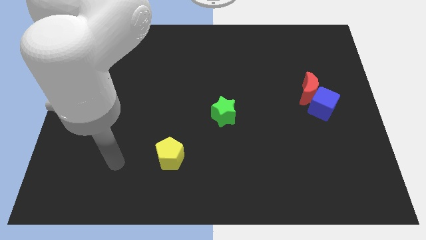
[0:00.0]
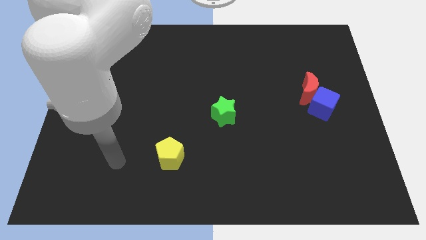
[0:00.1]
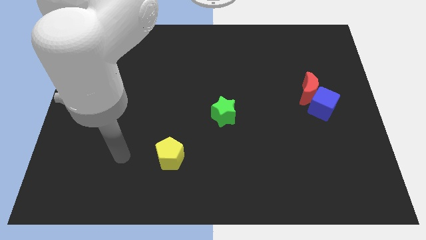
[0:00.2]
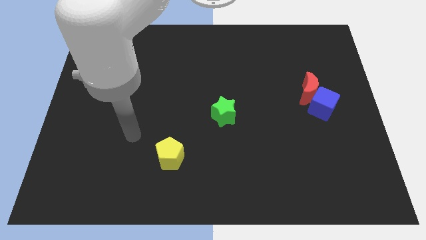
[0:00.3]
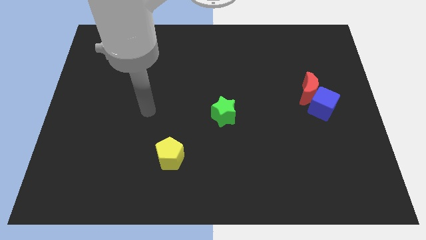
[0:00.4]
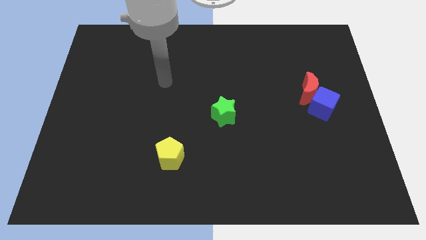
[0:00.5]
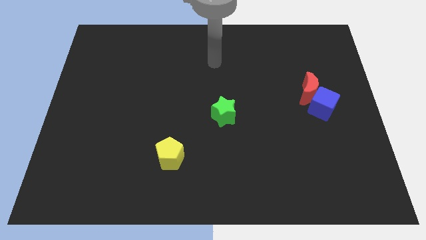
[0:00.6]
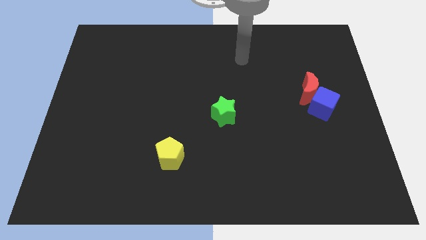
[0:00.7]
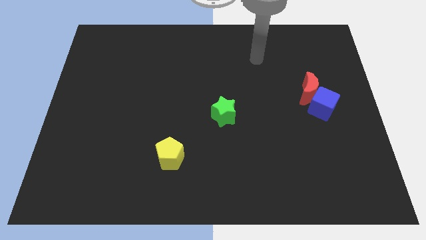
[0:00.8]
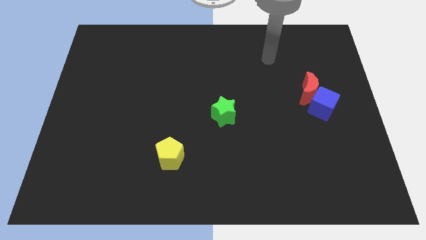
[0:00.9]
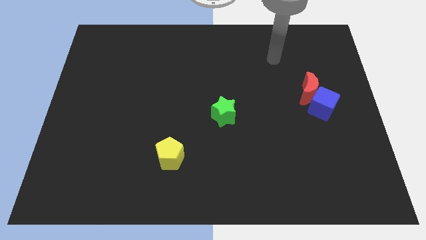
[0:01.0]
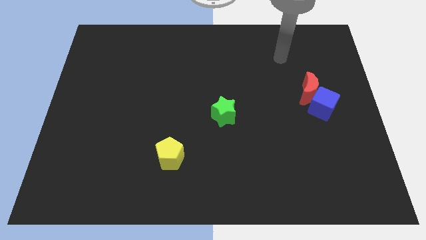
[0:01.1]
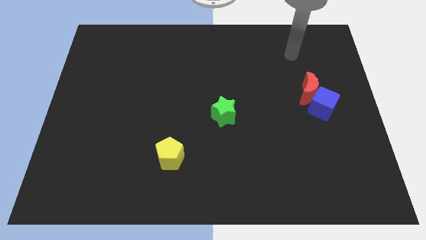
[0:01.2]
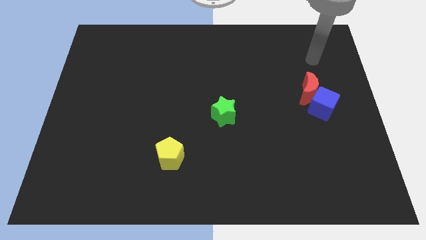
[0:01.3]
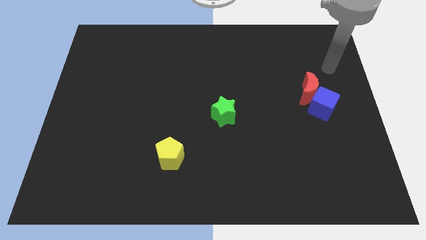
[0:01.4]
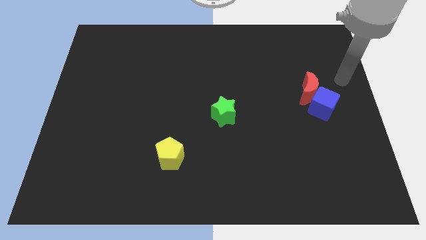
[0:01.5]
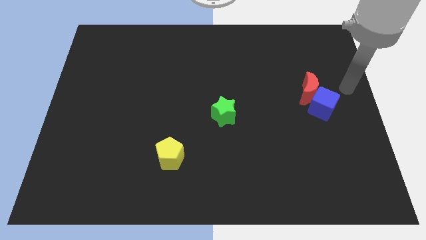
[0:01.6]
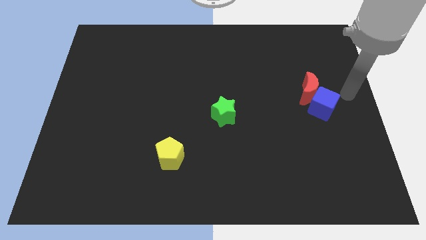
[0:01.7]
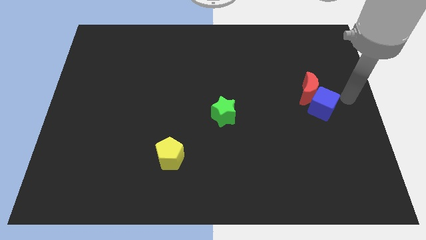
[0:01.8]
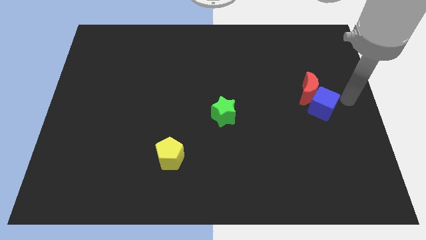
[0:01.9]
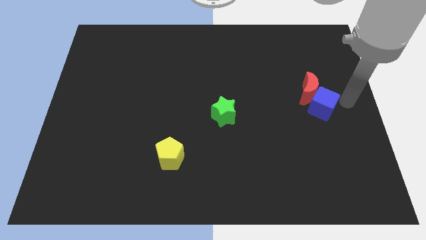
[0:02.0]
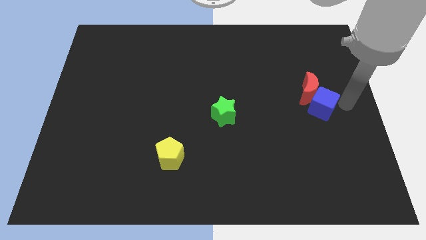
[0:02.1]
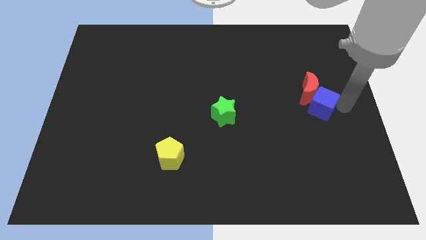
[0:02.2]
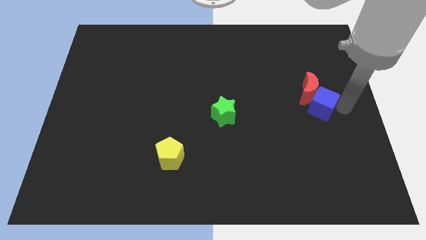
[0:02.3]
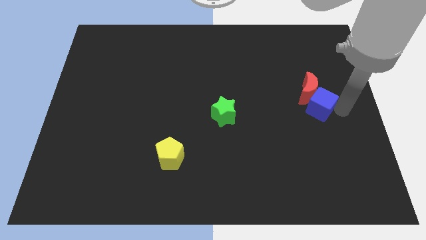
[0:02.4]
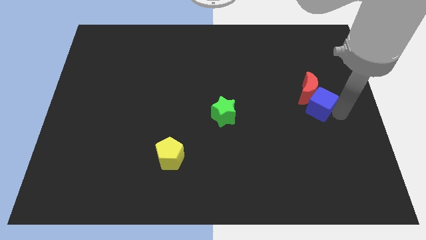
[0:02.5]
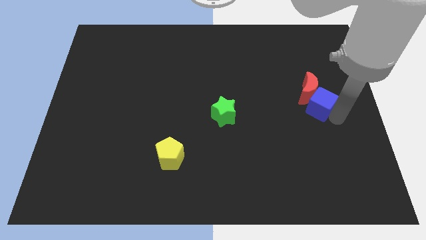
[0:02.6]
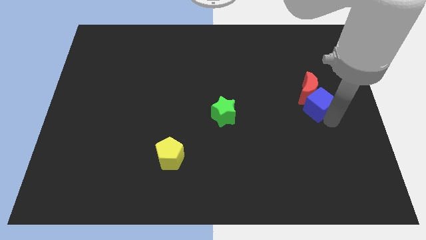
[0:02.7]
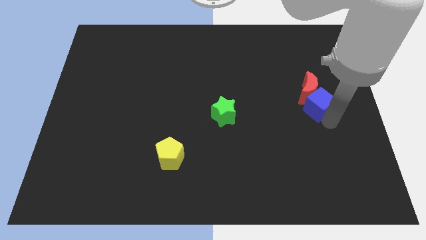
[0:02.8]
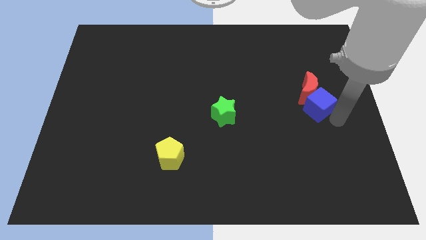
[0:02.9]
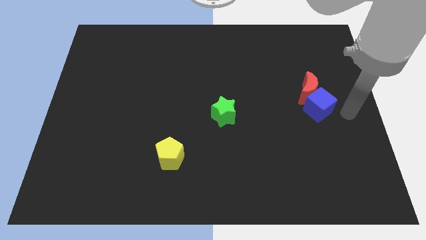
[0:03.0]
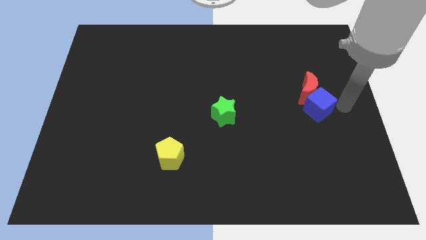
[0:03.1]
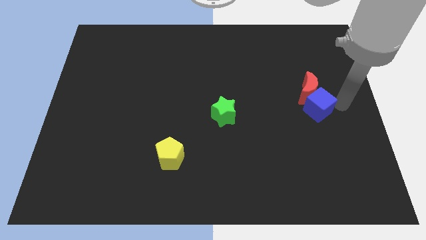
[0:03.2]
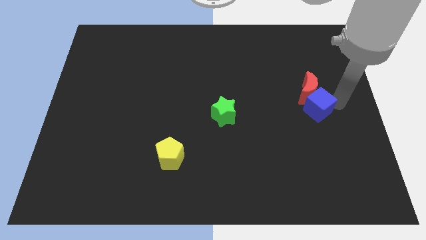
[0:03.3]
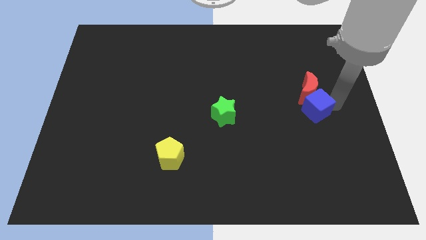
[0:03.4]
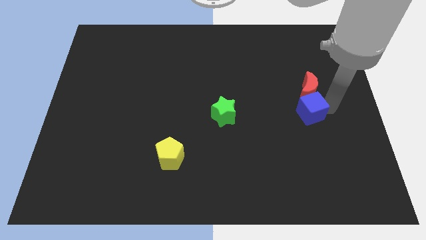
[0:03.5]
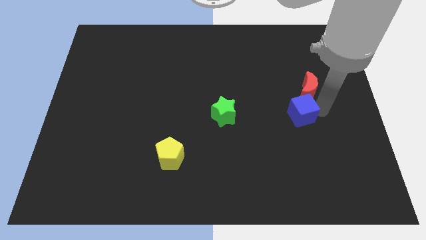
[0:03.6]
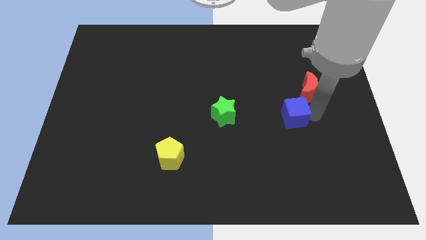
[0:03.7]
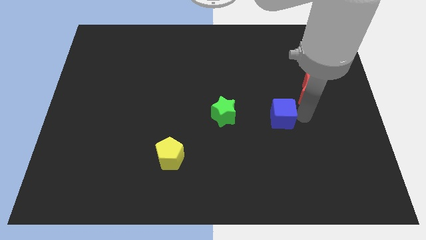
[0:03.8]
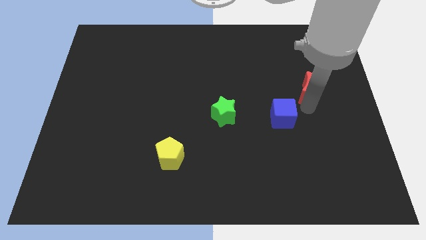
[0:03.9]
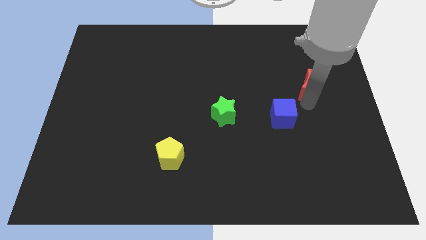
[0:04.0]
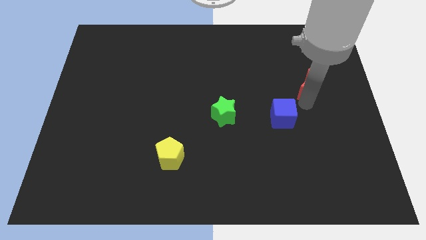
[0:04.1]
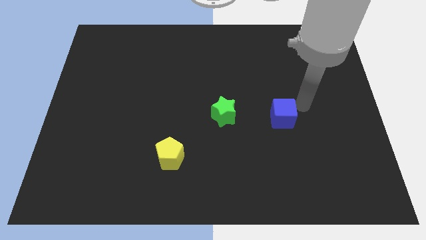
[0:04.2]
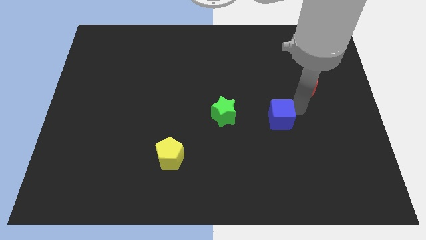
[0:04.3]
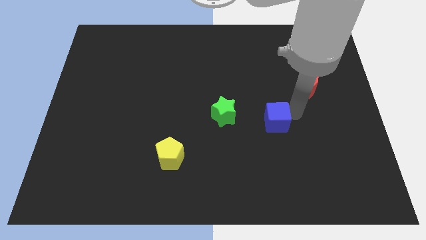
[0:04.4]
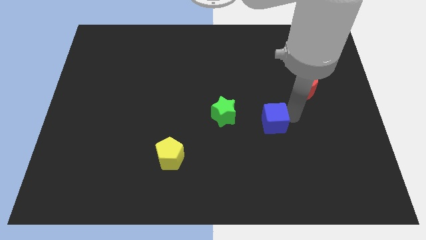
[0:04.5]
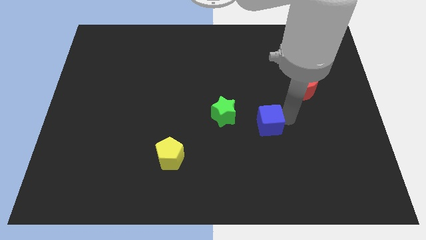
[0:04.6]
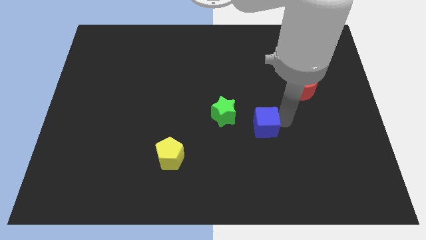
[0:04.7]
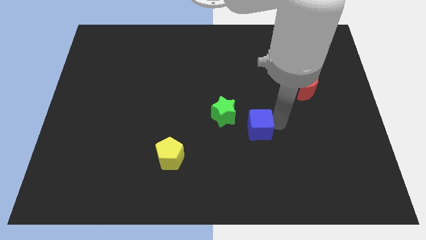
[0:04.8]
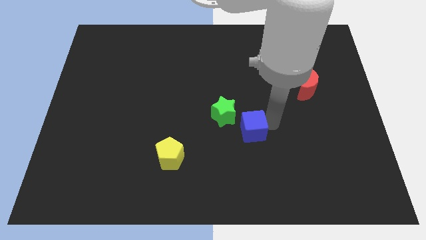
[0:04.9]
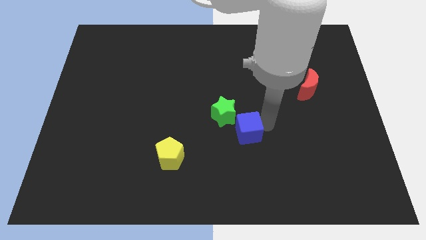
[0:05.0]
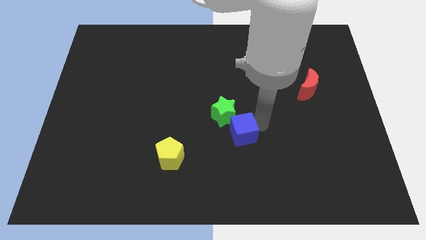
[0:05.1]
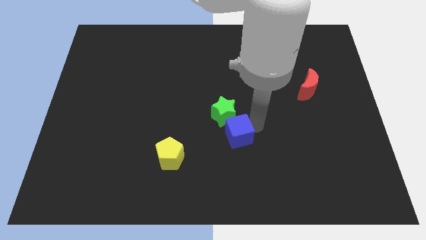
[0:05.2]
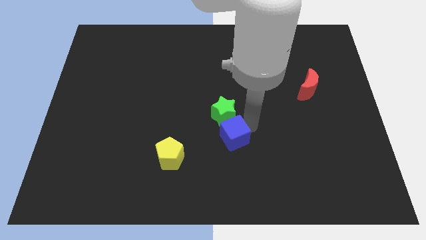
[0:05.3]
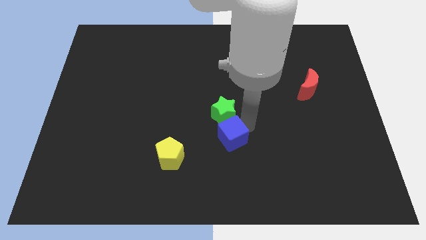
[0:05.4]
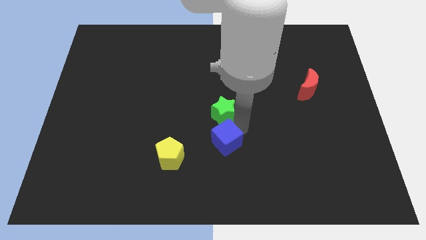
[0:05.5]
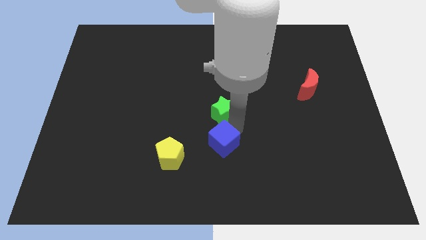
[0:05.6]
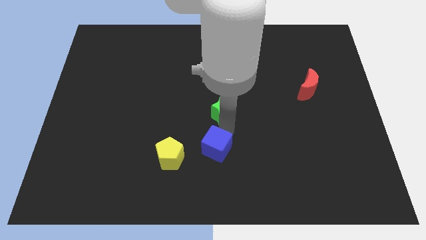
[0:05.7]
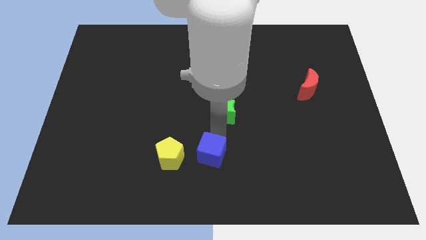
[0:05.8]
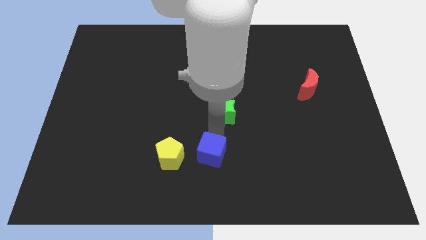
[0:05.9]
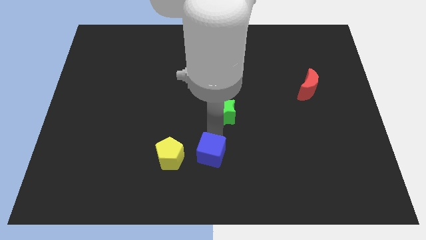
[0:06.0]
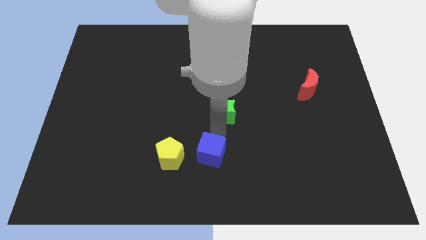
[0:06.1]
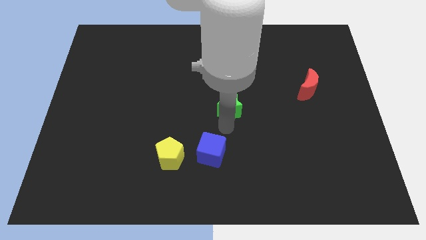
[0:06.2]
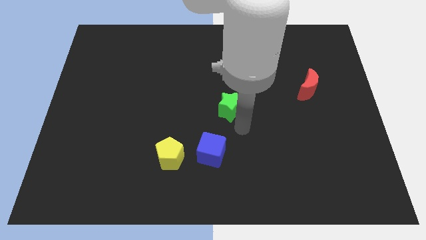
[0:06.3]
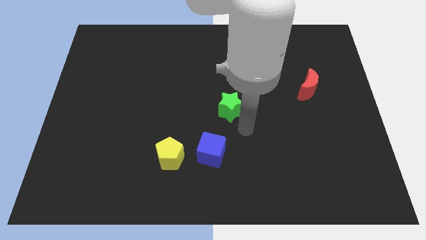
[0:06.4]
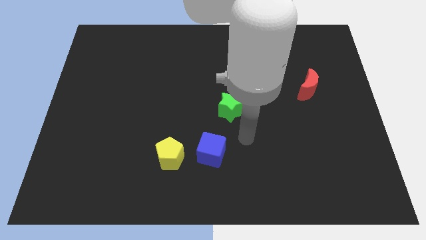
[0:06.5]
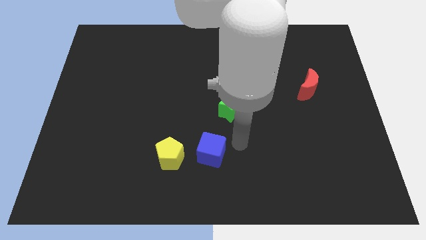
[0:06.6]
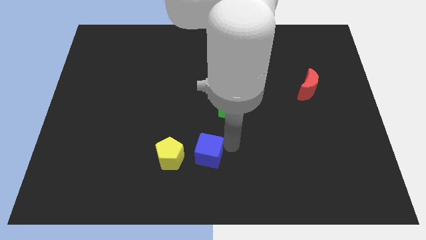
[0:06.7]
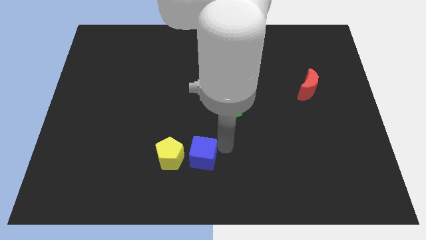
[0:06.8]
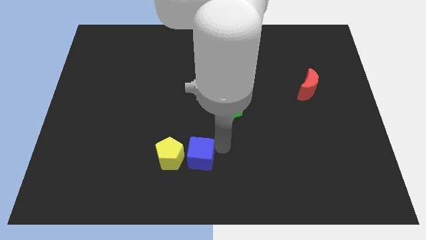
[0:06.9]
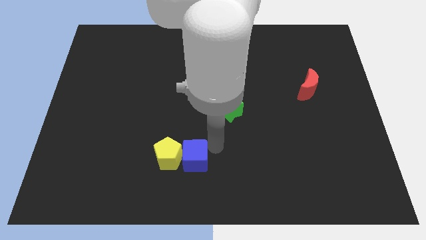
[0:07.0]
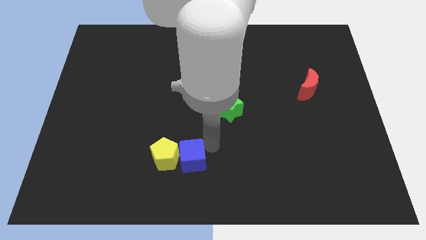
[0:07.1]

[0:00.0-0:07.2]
slide the cube close to the pentagon

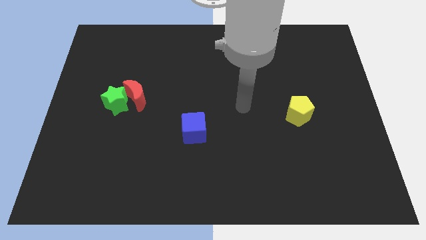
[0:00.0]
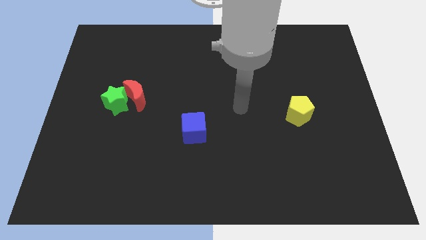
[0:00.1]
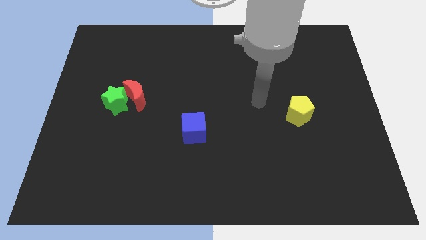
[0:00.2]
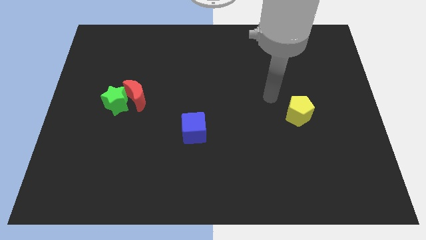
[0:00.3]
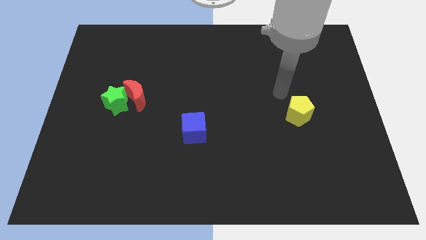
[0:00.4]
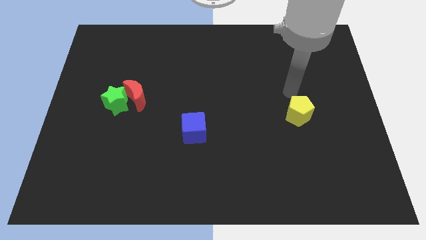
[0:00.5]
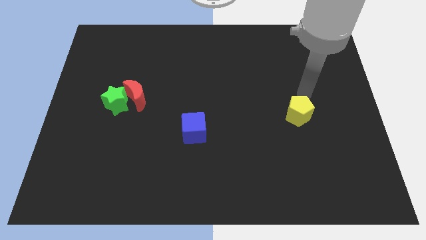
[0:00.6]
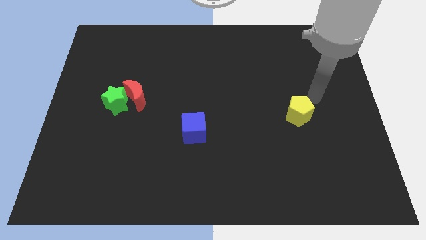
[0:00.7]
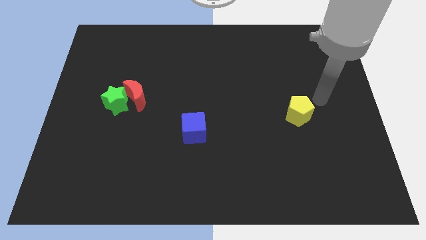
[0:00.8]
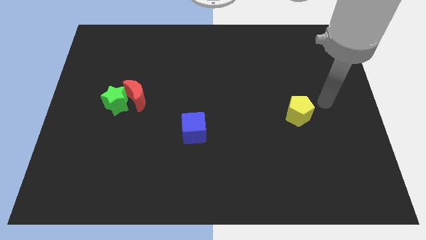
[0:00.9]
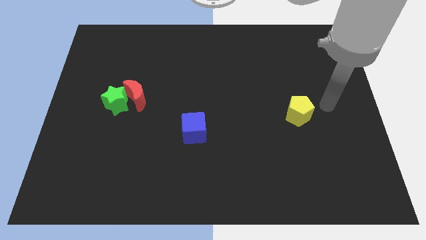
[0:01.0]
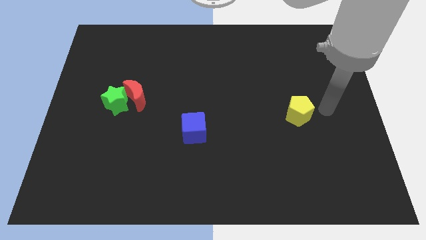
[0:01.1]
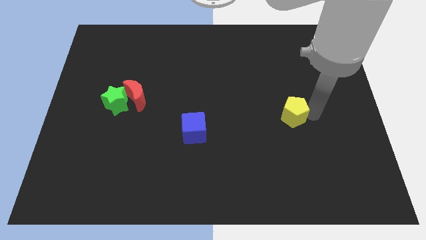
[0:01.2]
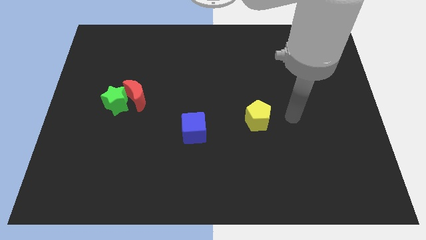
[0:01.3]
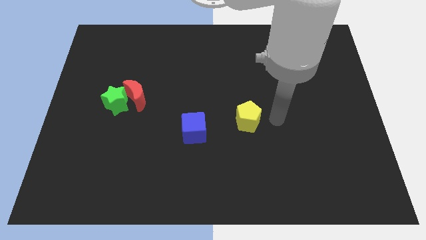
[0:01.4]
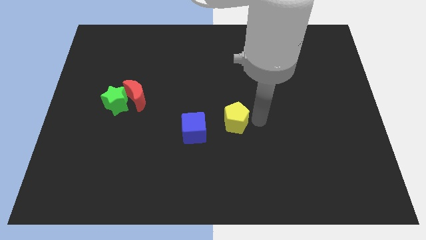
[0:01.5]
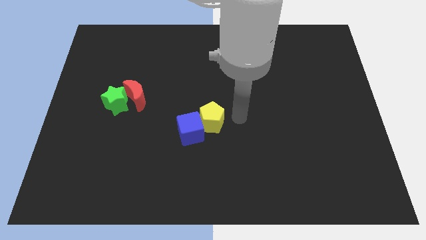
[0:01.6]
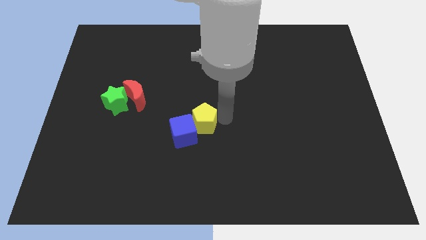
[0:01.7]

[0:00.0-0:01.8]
move the yellow pentagon to the blue cube
